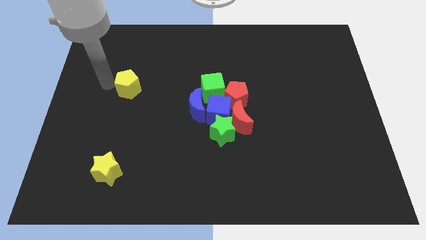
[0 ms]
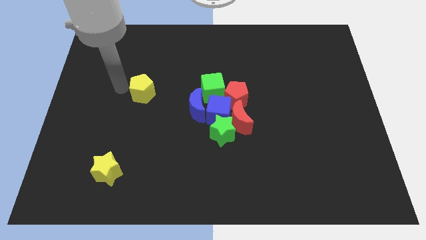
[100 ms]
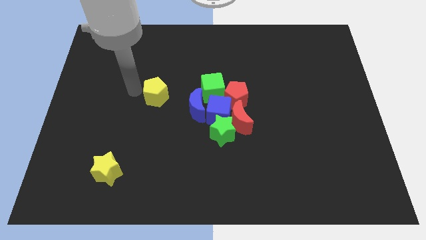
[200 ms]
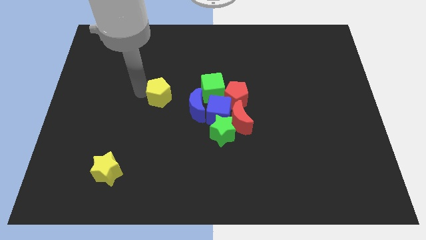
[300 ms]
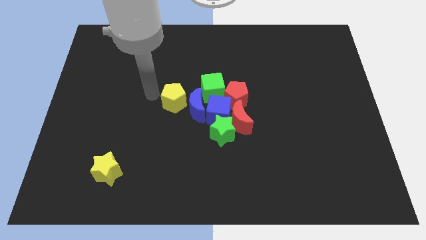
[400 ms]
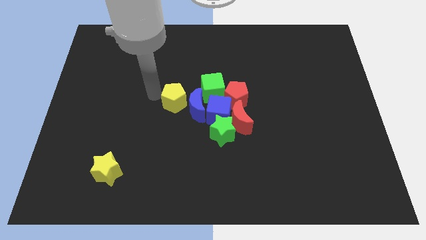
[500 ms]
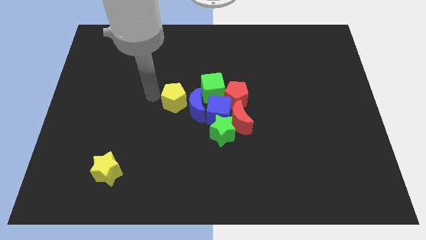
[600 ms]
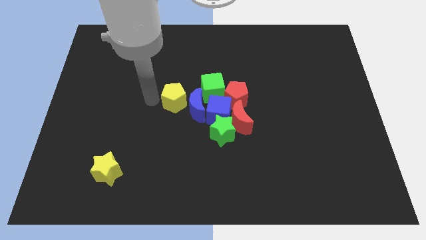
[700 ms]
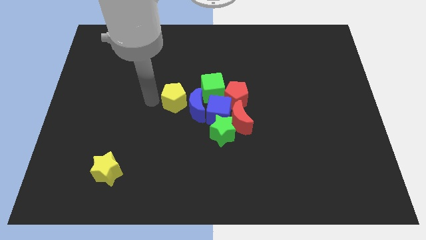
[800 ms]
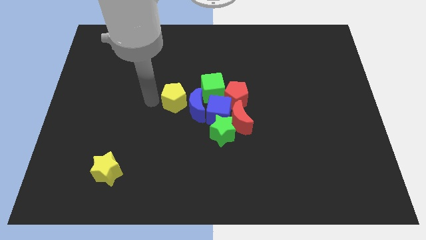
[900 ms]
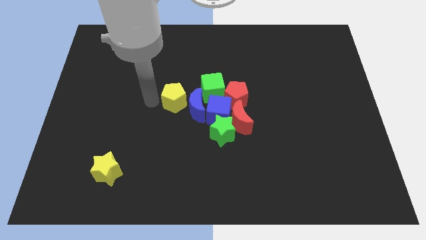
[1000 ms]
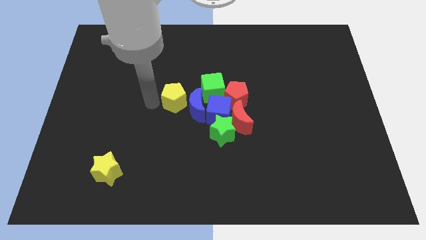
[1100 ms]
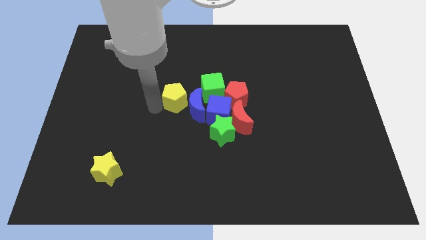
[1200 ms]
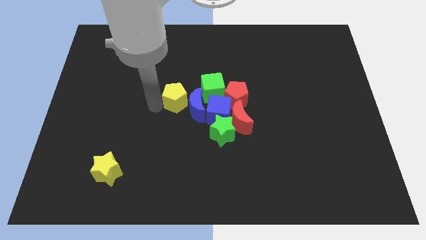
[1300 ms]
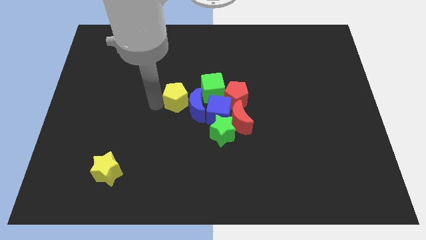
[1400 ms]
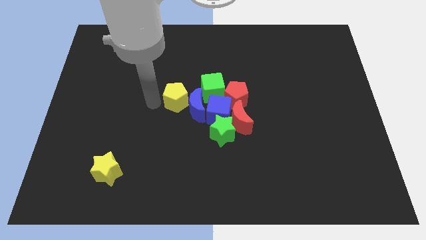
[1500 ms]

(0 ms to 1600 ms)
push the yellow pentagon to the left of the blue moon

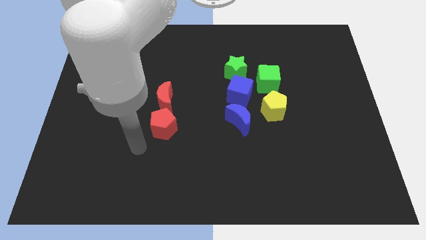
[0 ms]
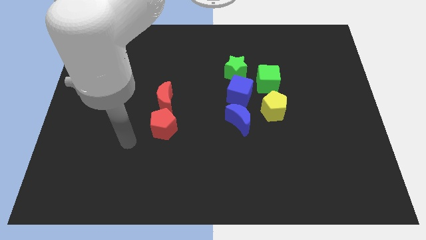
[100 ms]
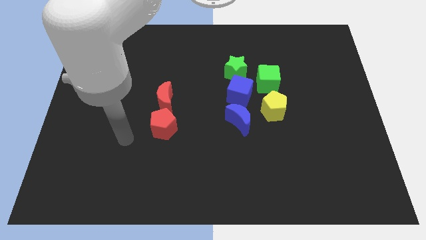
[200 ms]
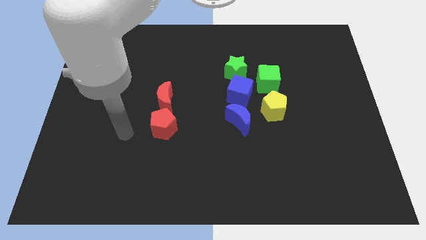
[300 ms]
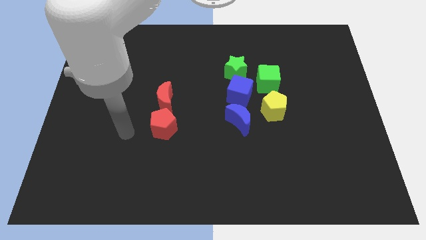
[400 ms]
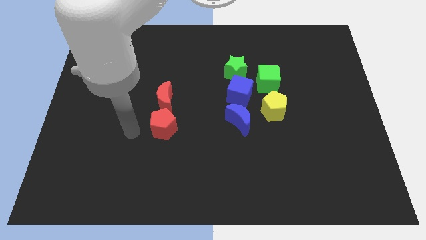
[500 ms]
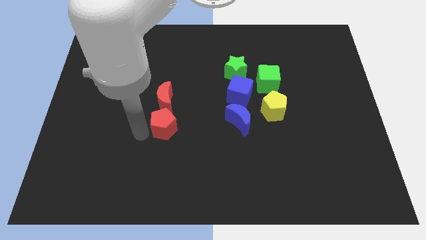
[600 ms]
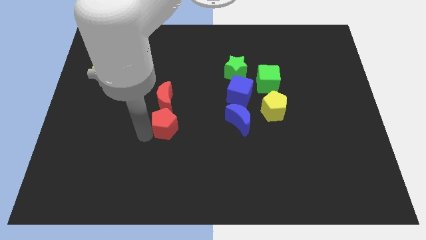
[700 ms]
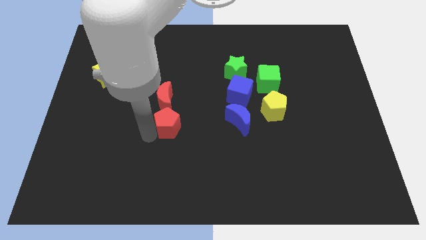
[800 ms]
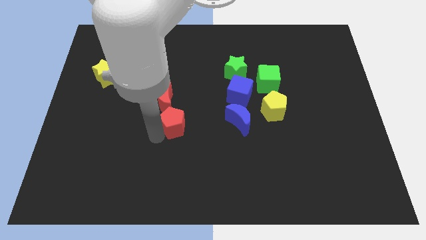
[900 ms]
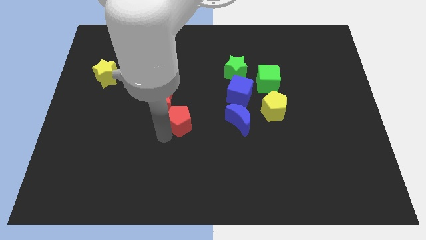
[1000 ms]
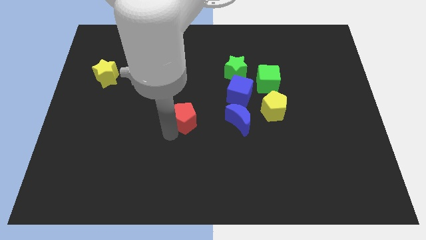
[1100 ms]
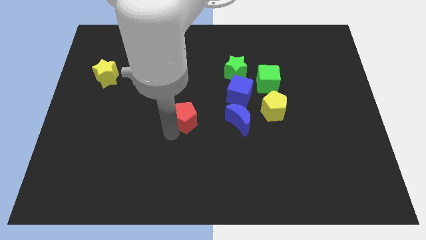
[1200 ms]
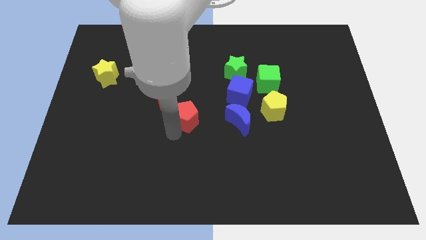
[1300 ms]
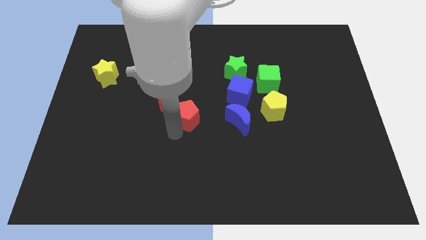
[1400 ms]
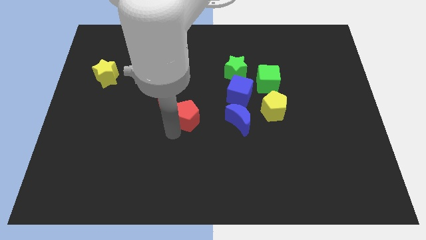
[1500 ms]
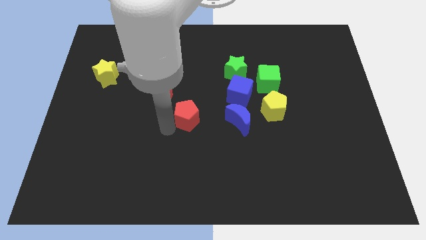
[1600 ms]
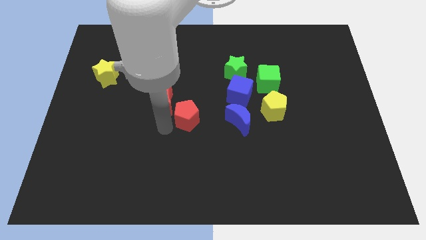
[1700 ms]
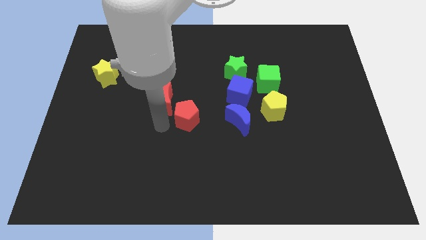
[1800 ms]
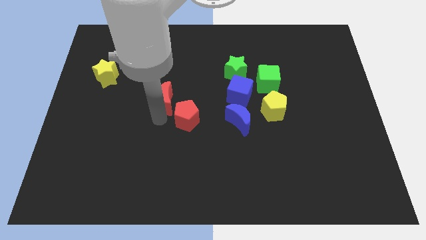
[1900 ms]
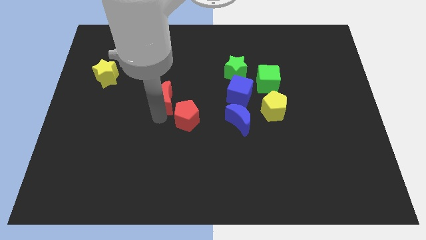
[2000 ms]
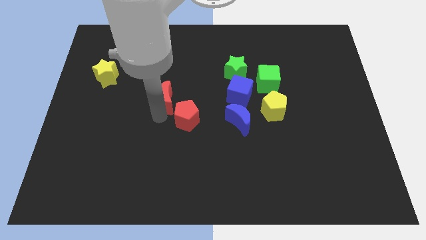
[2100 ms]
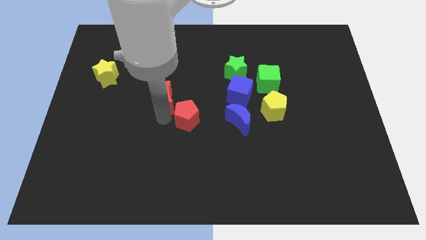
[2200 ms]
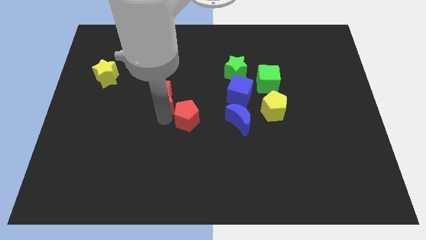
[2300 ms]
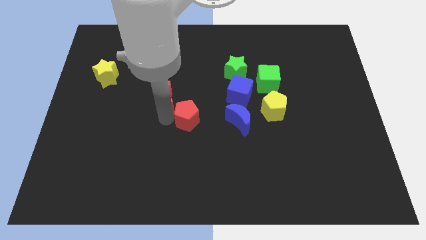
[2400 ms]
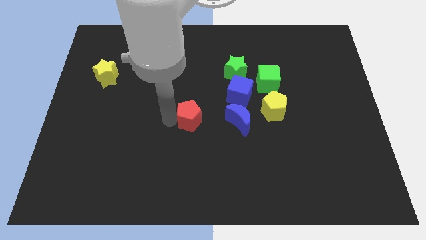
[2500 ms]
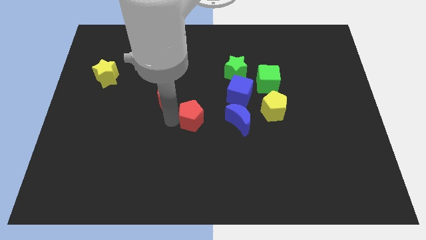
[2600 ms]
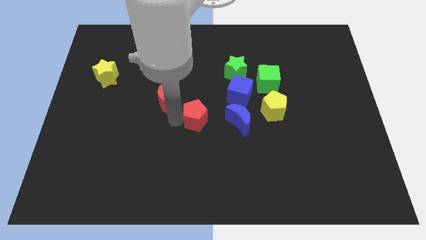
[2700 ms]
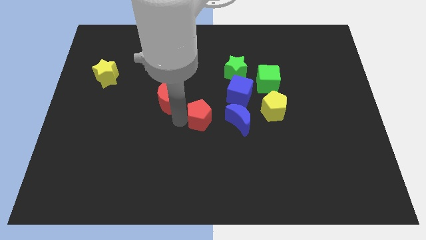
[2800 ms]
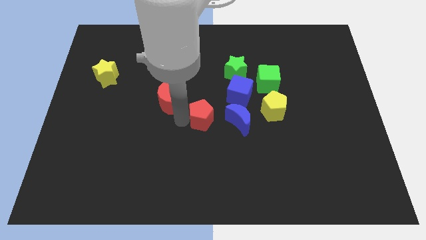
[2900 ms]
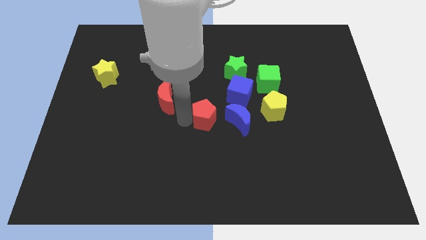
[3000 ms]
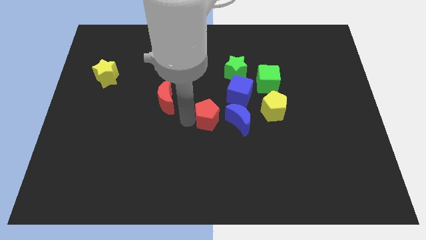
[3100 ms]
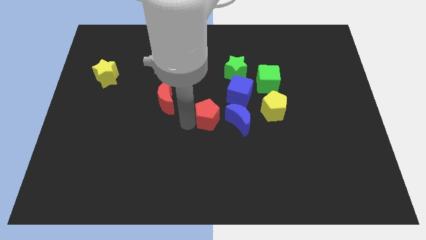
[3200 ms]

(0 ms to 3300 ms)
push the red pentagon close to the left side of the blue moon

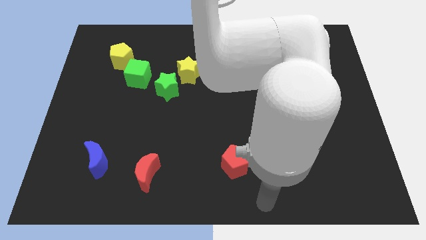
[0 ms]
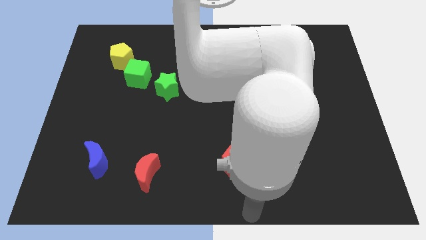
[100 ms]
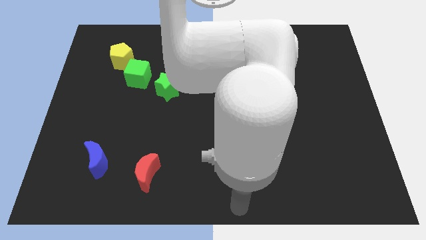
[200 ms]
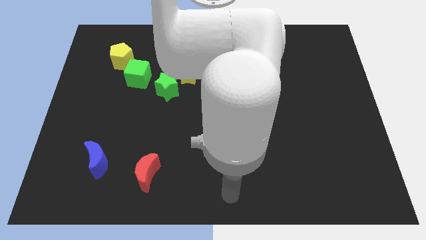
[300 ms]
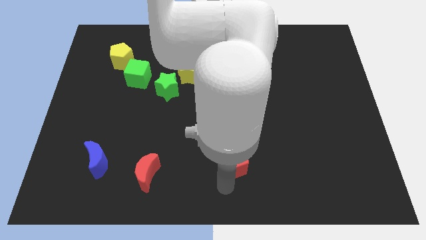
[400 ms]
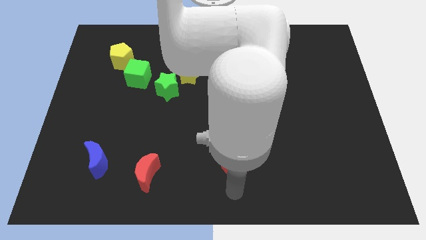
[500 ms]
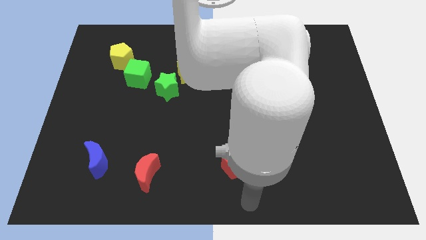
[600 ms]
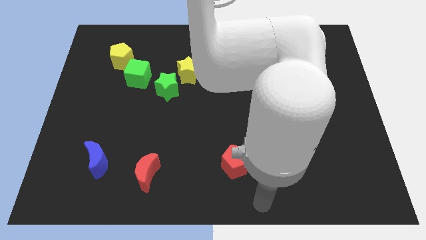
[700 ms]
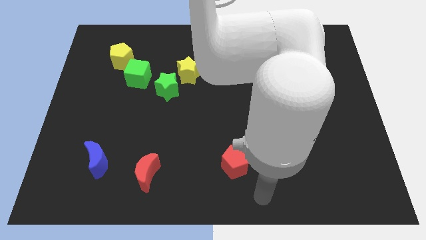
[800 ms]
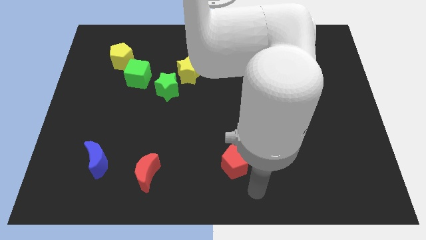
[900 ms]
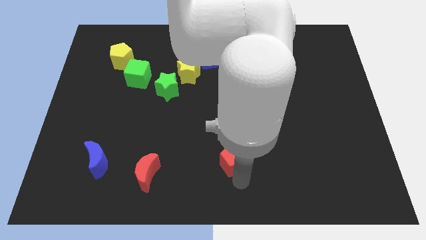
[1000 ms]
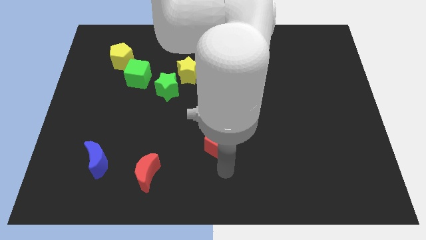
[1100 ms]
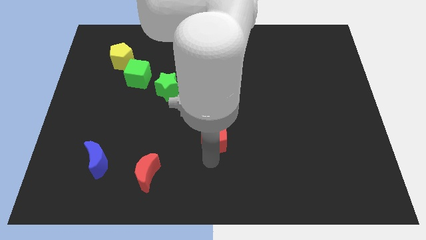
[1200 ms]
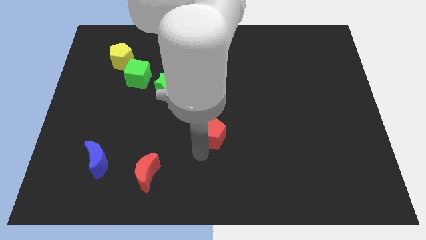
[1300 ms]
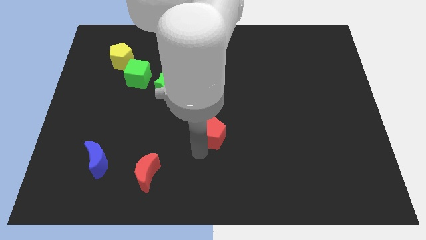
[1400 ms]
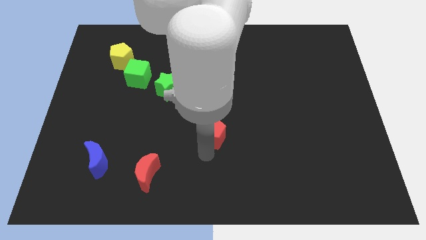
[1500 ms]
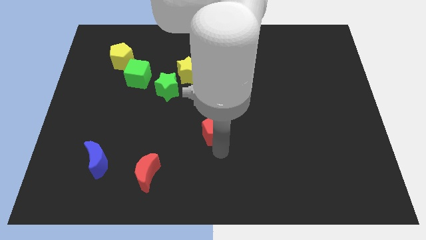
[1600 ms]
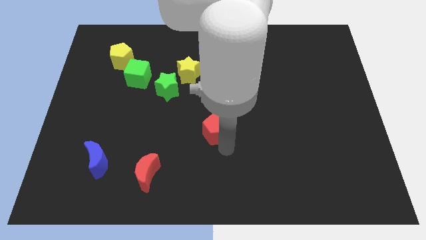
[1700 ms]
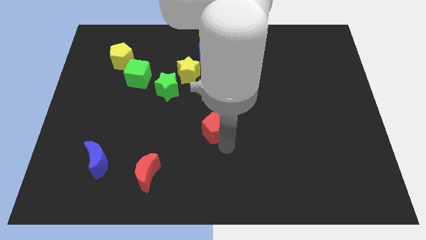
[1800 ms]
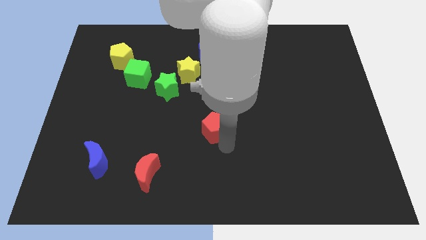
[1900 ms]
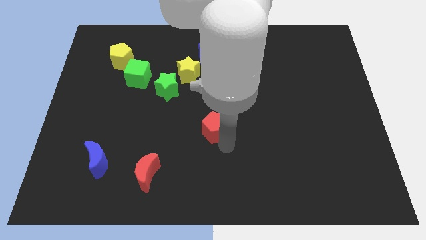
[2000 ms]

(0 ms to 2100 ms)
move the red pentagon towards the center of the board

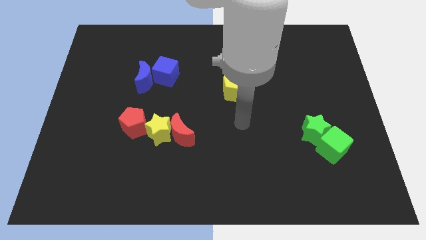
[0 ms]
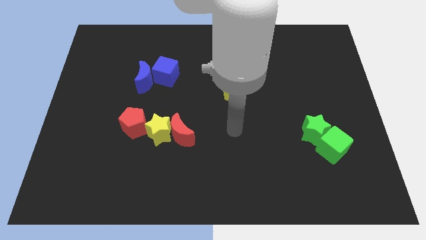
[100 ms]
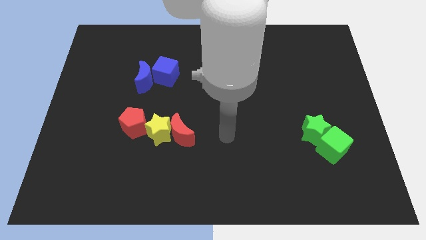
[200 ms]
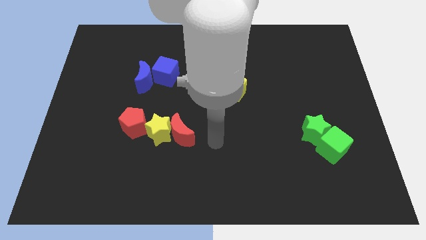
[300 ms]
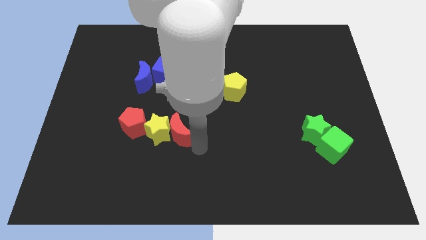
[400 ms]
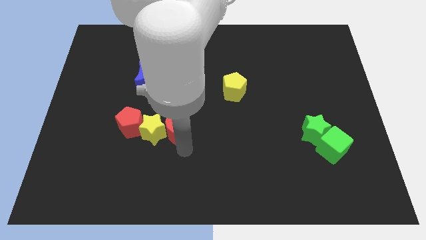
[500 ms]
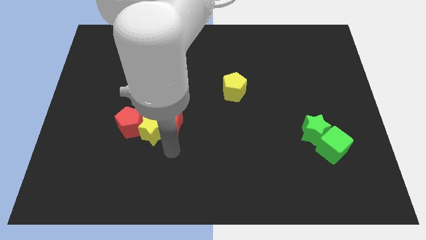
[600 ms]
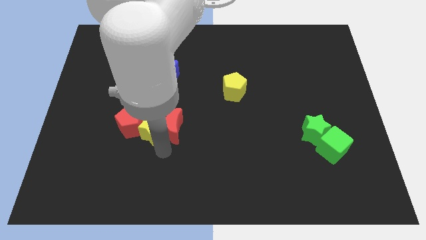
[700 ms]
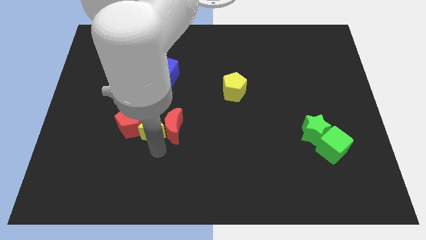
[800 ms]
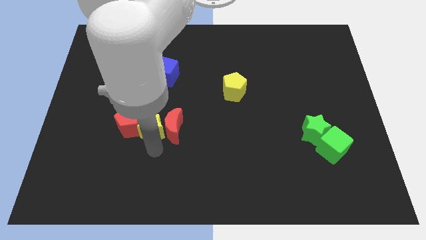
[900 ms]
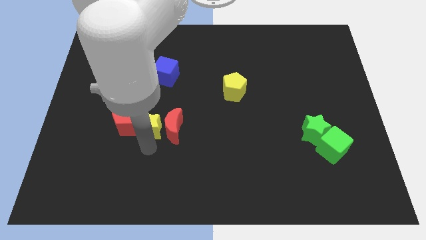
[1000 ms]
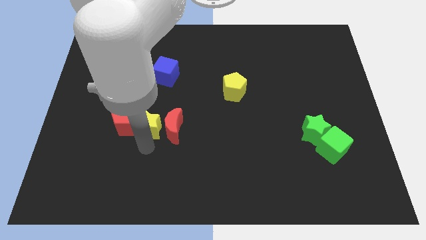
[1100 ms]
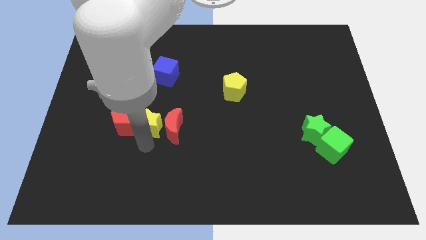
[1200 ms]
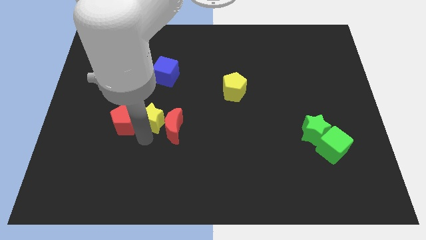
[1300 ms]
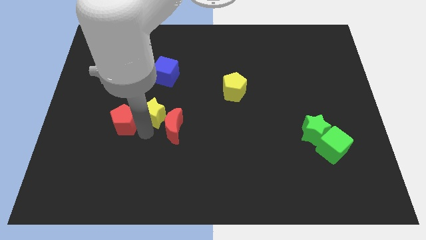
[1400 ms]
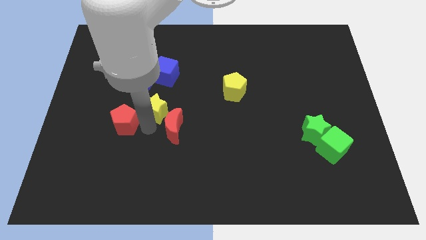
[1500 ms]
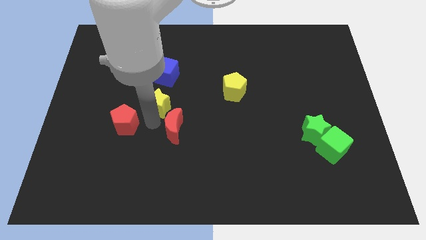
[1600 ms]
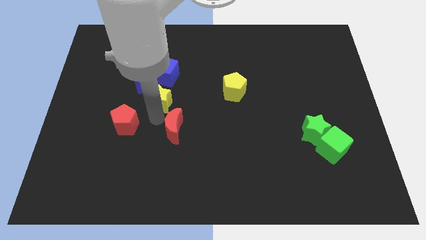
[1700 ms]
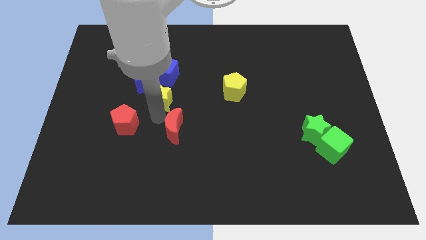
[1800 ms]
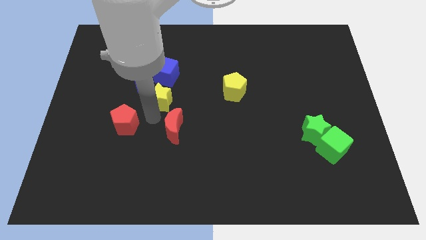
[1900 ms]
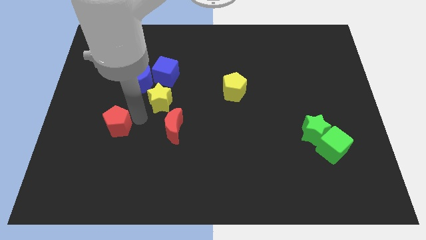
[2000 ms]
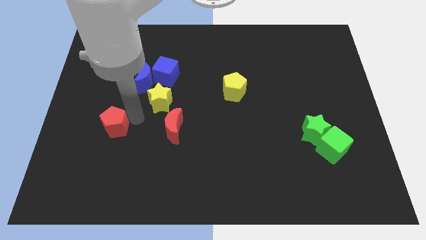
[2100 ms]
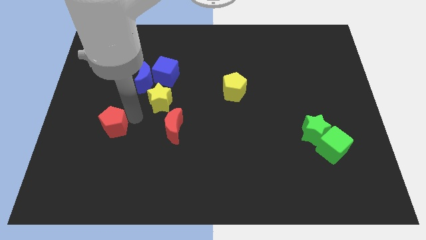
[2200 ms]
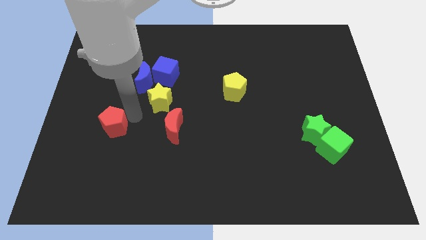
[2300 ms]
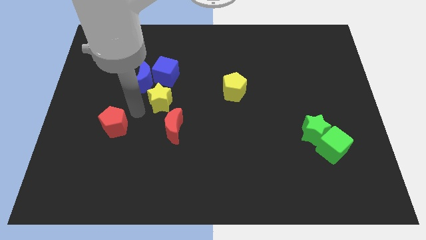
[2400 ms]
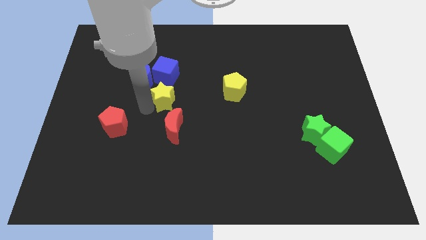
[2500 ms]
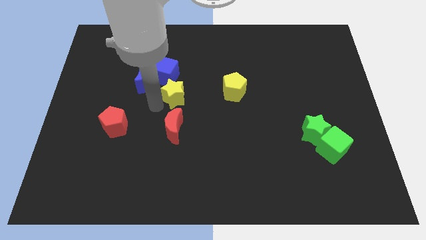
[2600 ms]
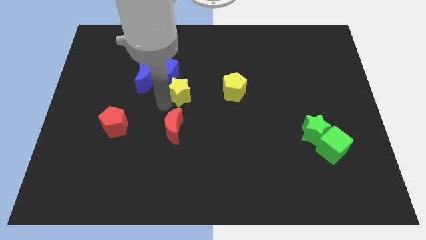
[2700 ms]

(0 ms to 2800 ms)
push the red blocks and separate the yellow star towards blue cube
